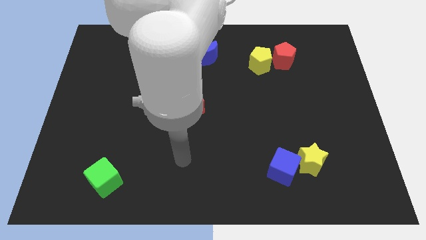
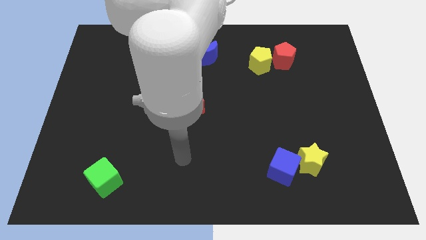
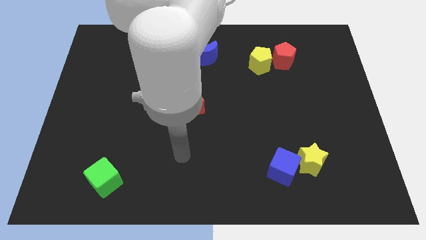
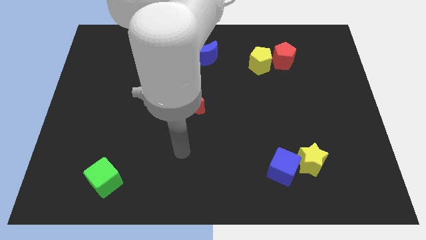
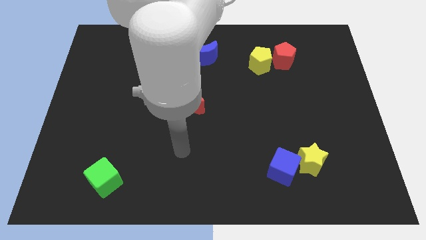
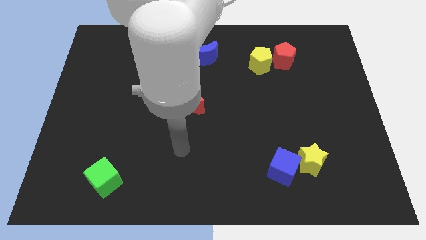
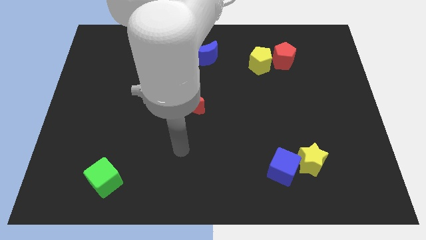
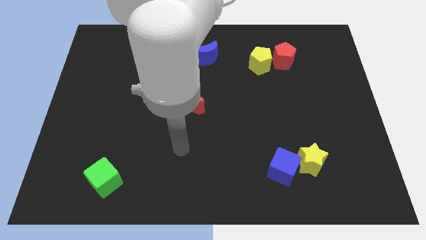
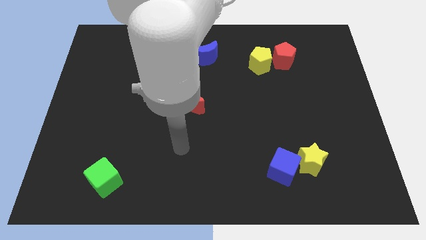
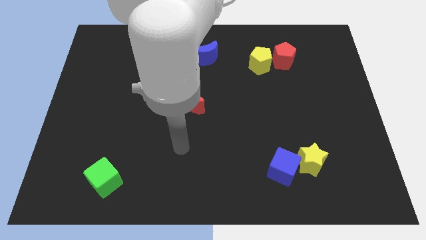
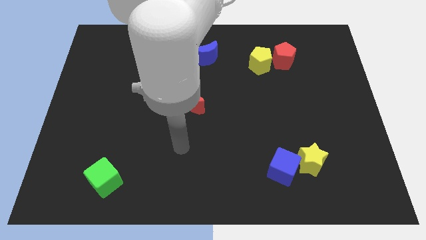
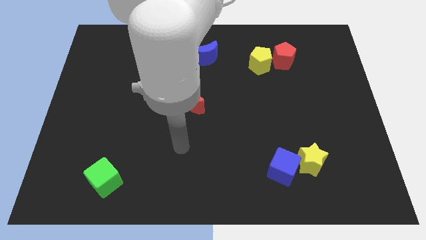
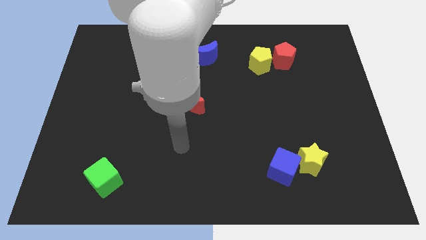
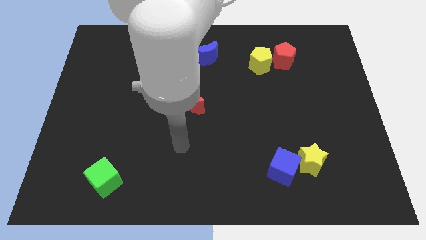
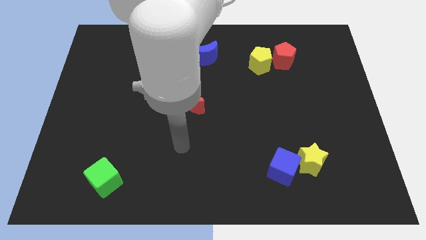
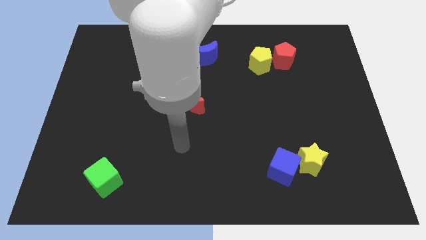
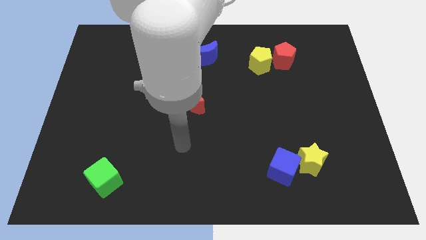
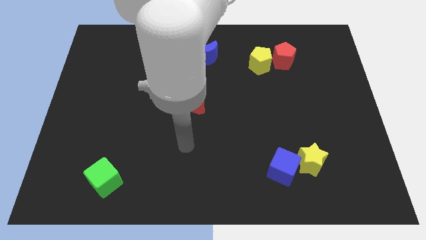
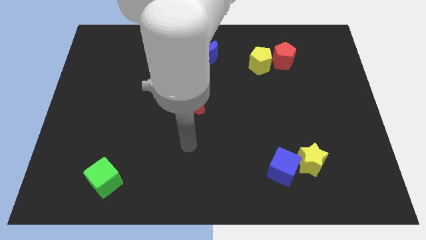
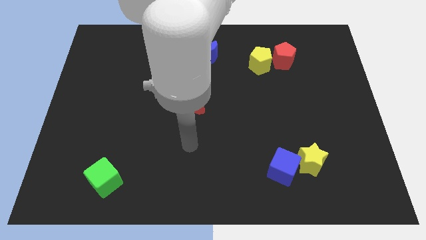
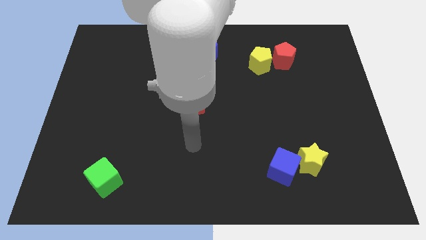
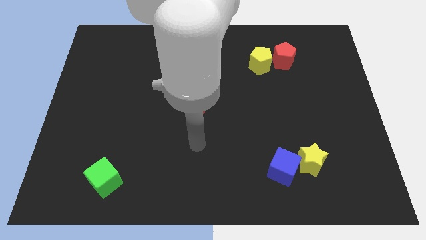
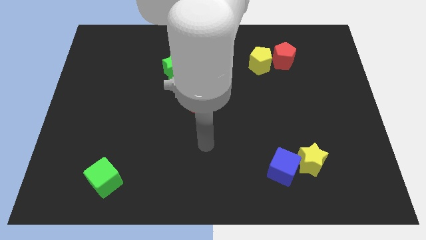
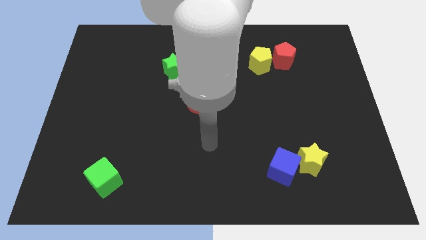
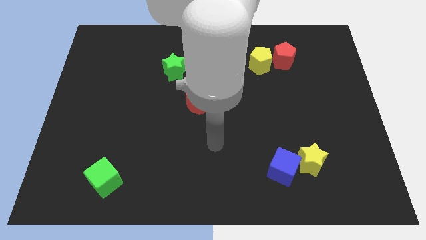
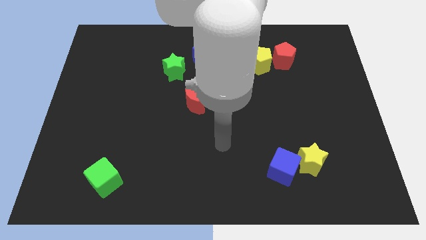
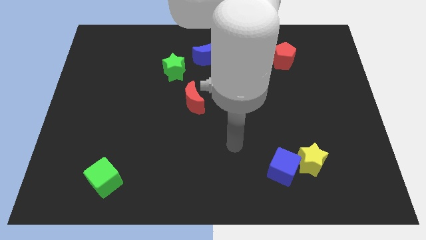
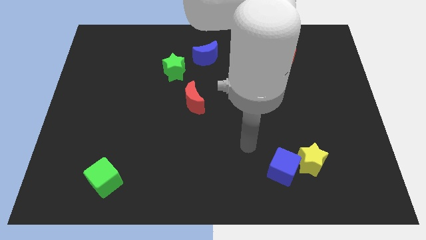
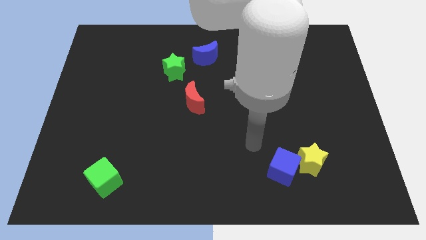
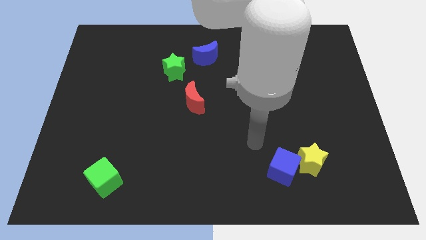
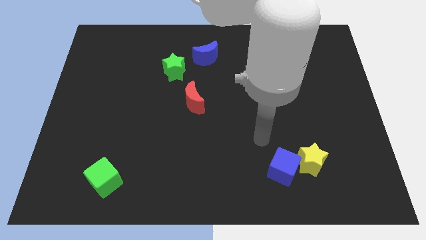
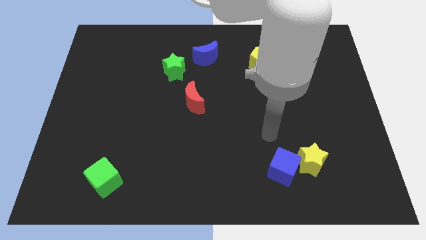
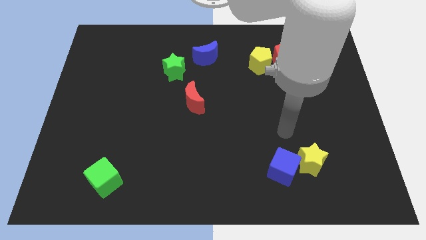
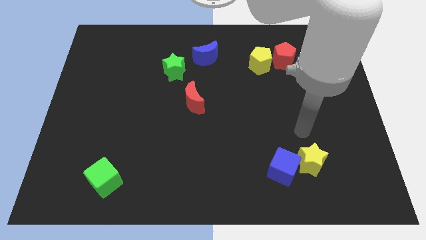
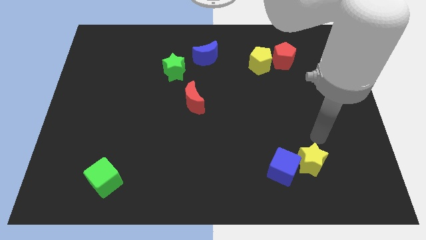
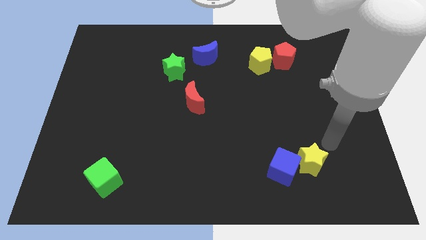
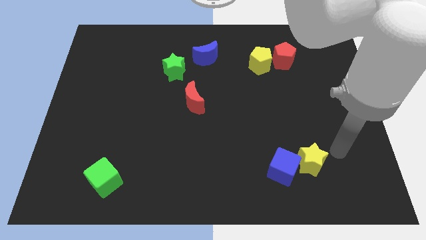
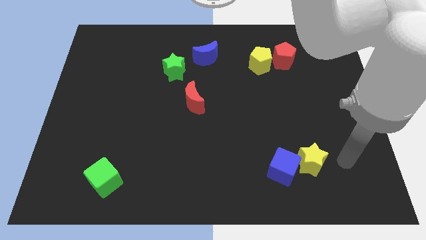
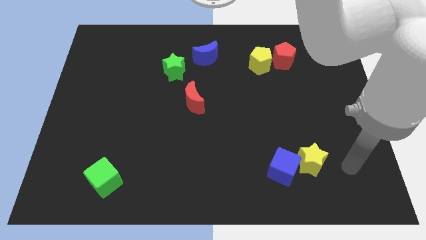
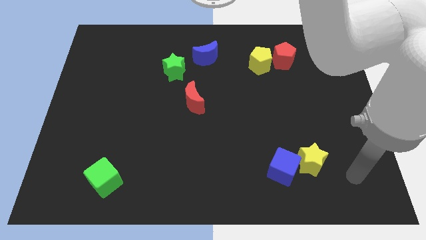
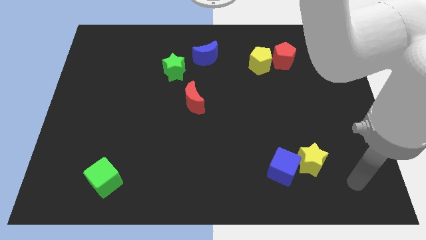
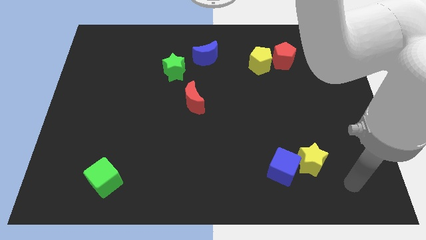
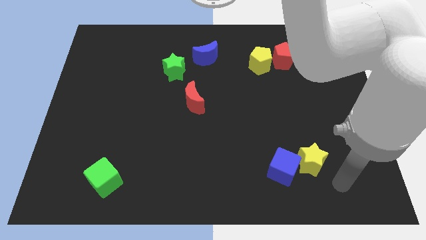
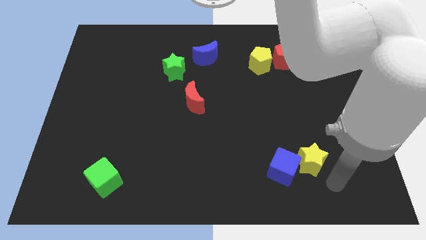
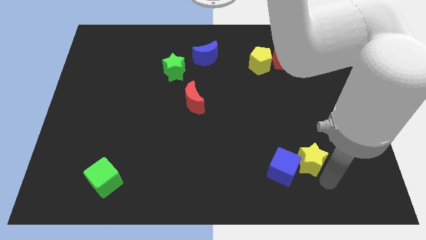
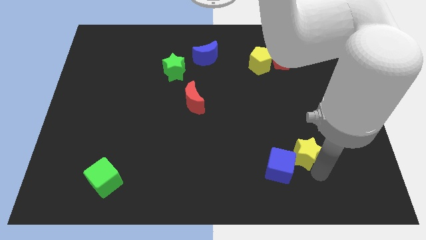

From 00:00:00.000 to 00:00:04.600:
move the arm to the yellow star

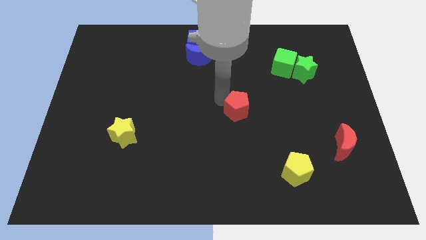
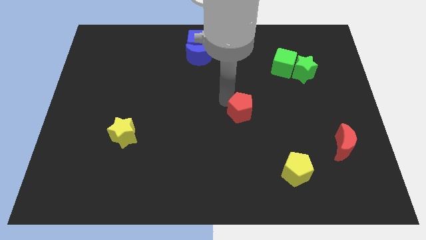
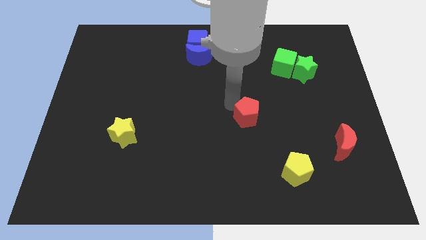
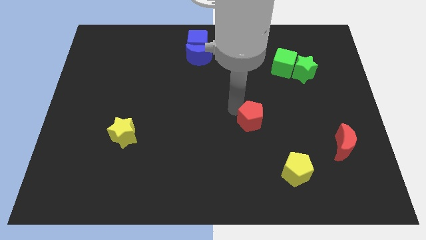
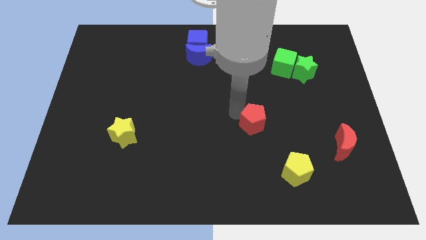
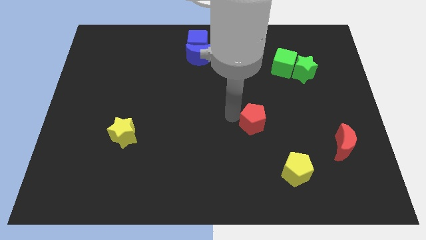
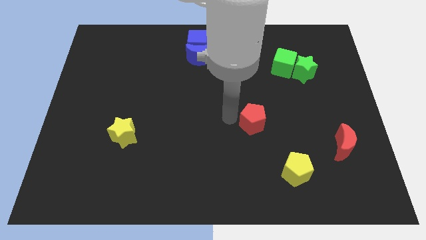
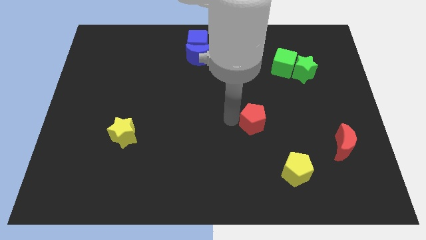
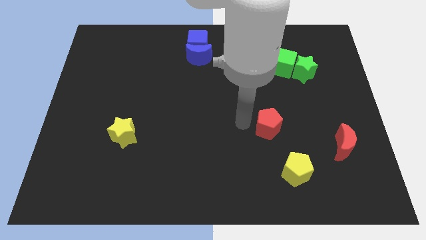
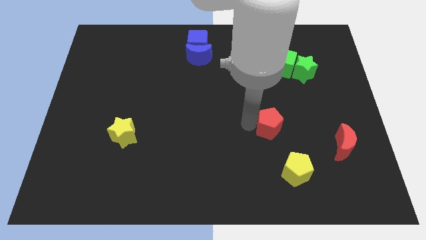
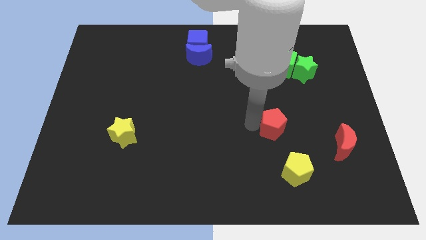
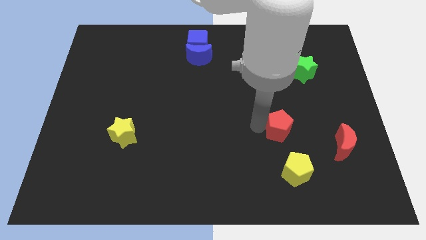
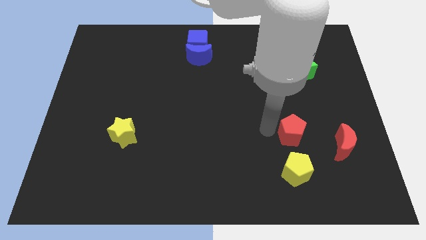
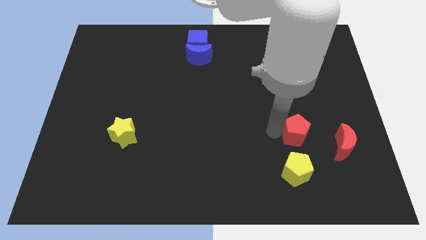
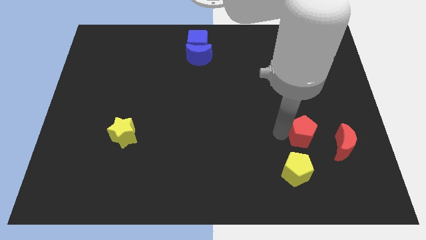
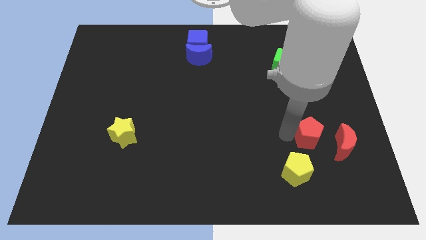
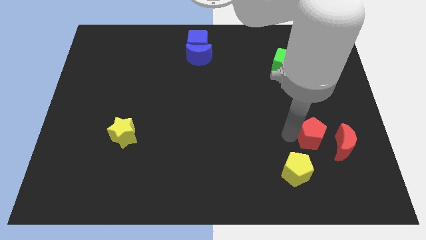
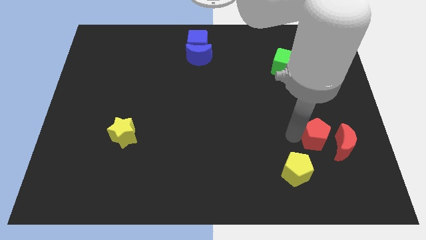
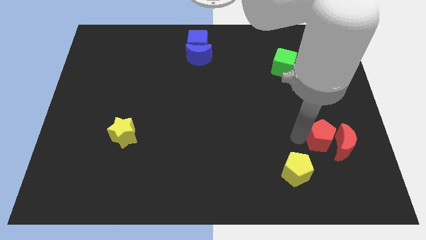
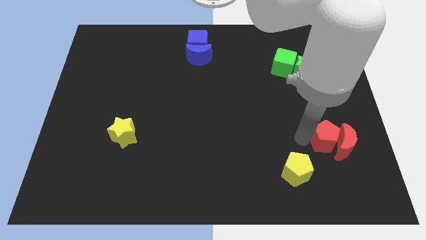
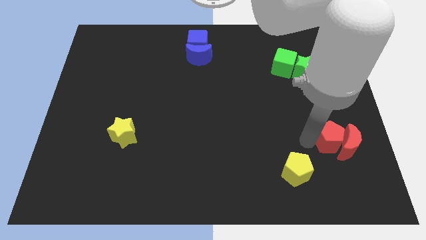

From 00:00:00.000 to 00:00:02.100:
place the red pentagon close to the red crescent

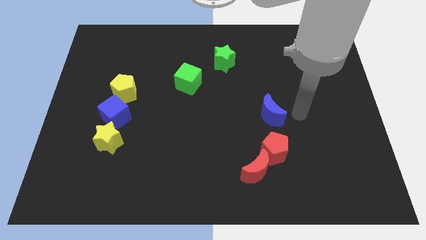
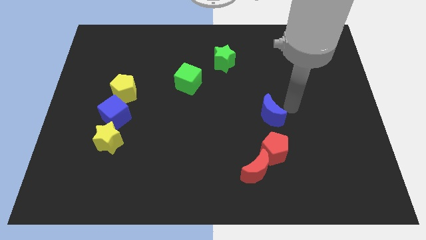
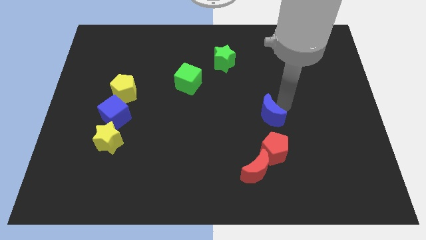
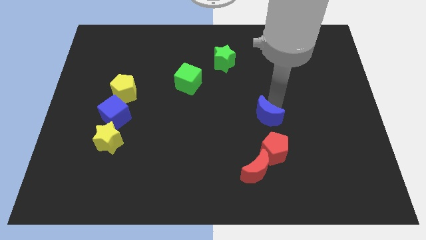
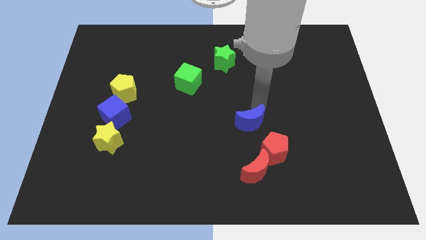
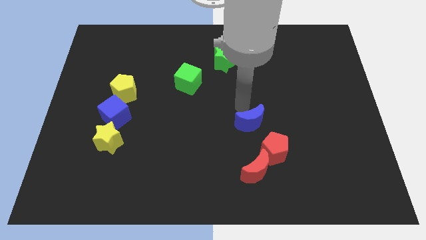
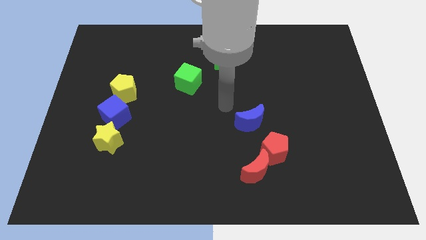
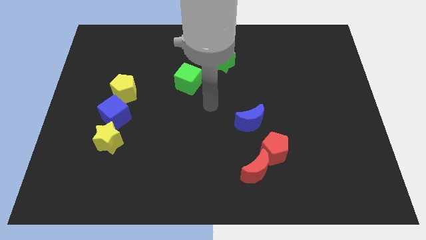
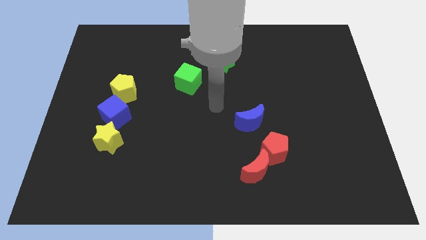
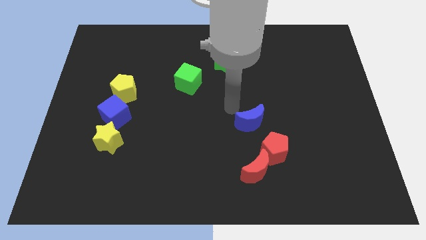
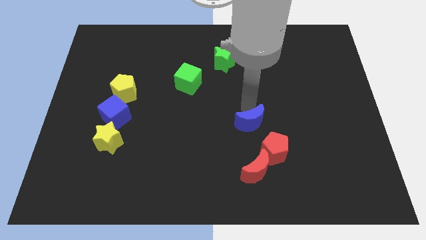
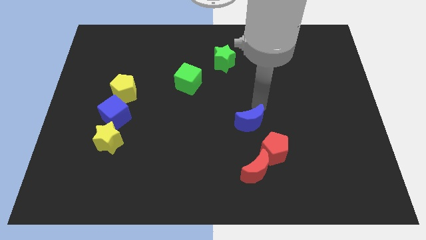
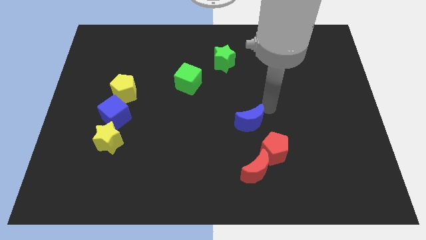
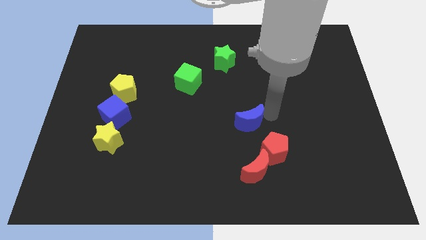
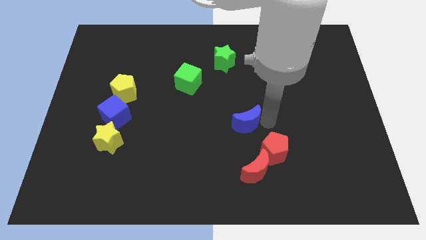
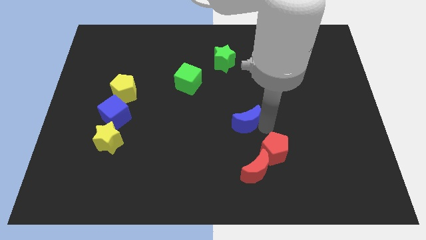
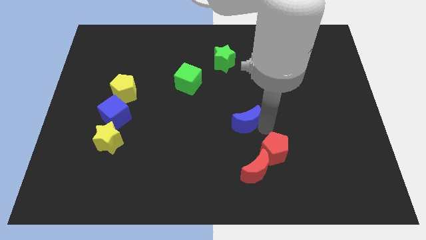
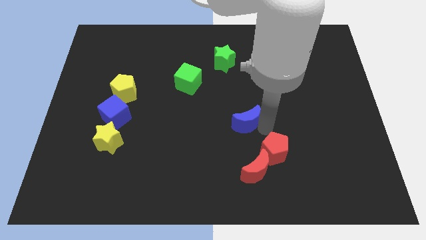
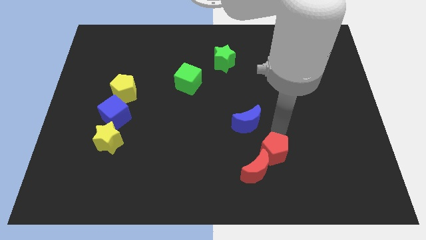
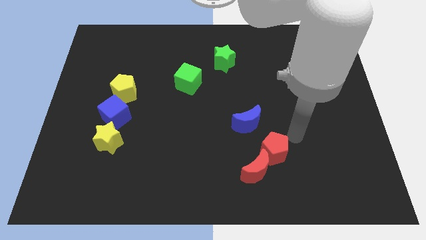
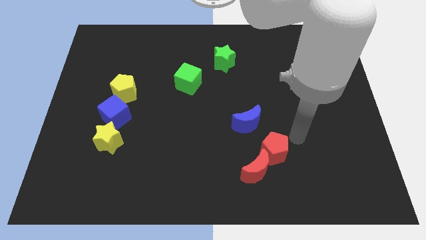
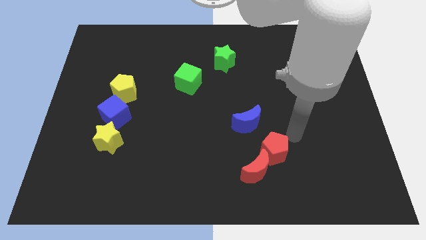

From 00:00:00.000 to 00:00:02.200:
slide the blue moon vertically at the top of red crescent

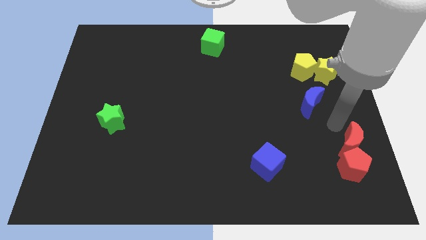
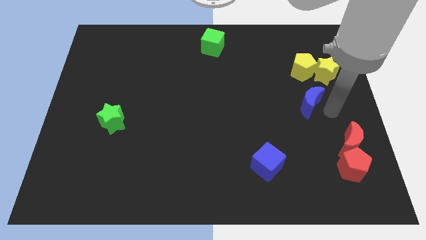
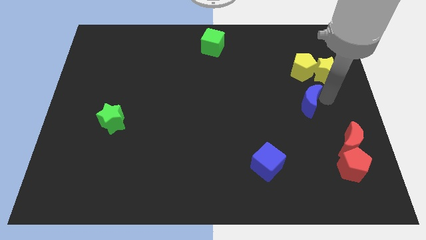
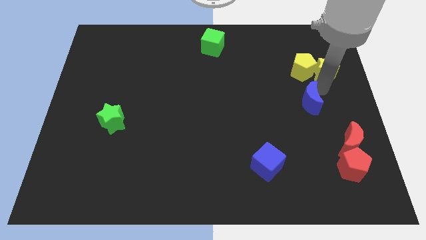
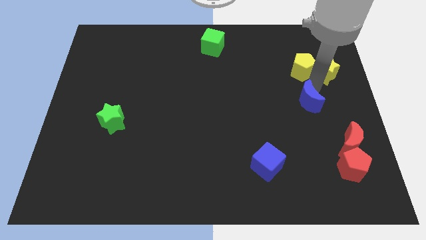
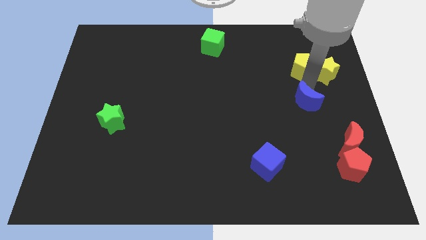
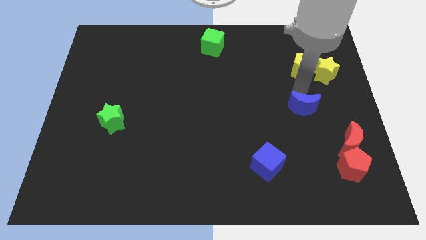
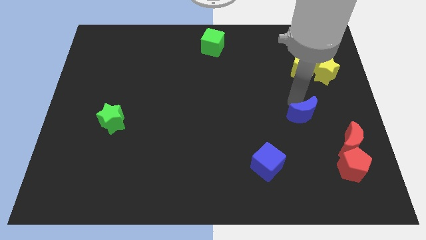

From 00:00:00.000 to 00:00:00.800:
slightly move the blue moon to the bottom of the board
